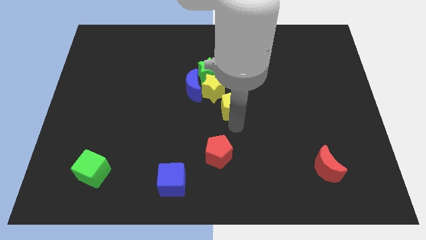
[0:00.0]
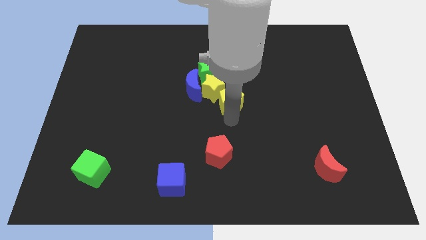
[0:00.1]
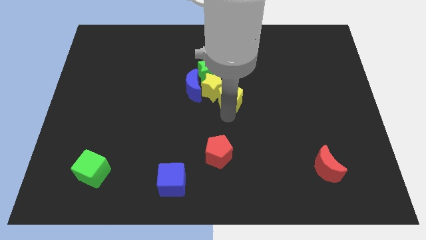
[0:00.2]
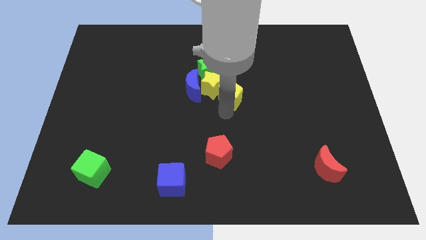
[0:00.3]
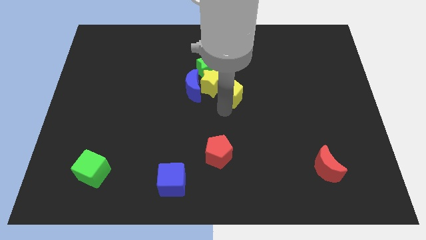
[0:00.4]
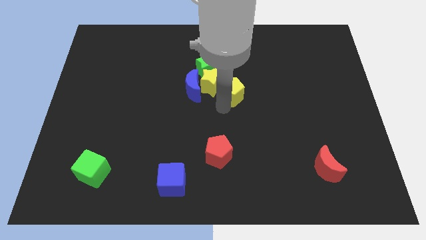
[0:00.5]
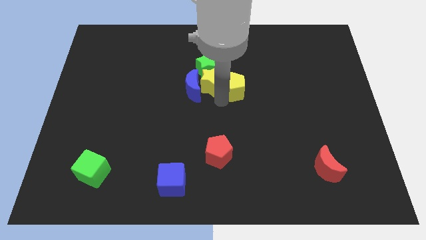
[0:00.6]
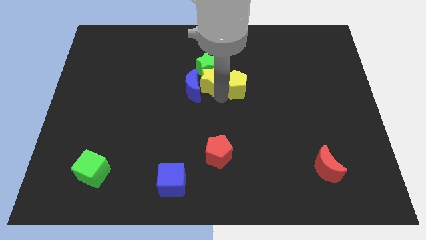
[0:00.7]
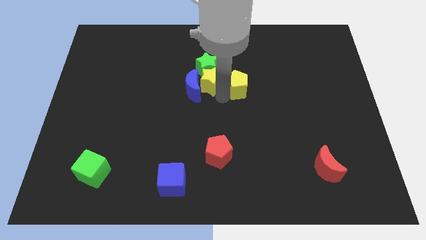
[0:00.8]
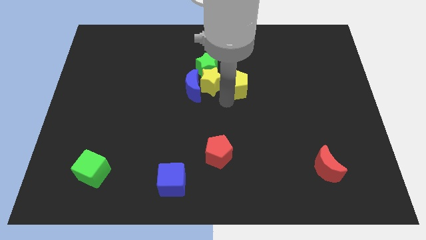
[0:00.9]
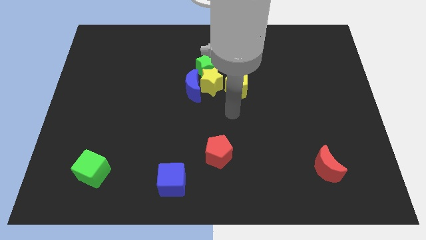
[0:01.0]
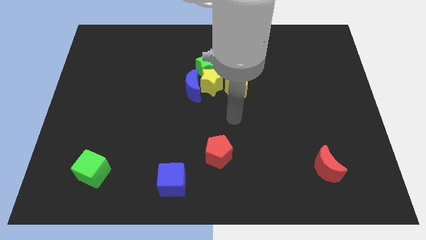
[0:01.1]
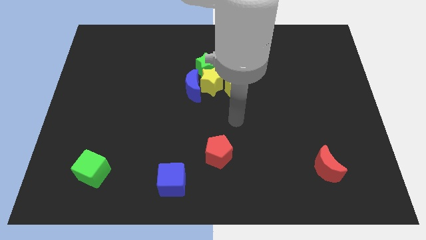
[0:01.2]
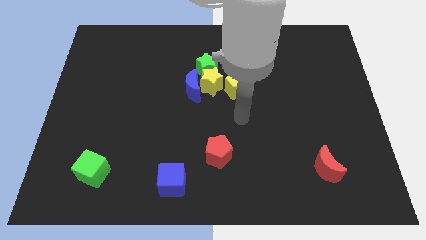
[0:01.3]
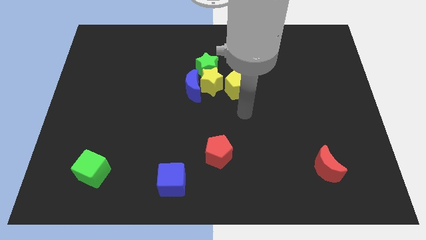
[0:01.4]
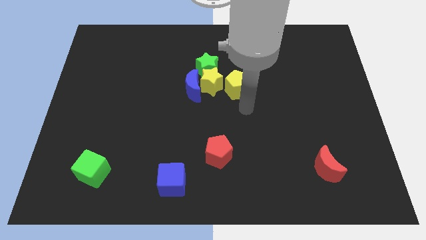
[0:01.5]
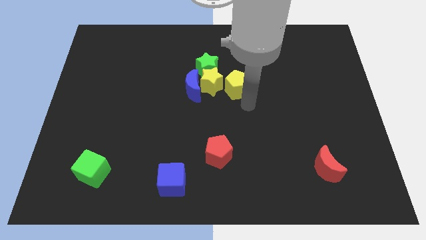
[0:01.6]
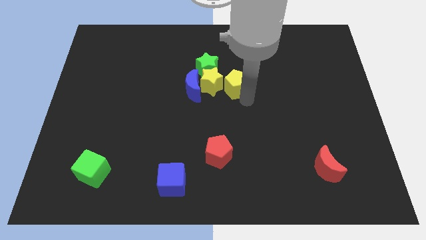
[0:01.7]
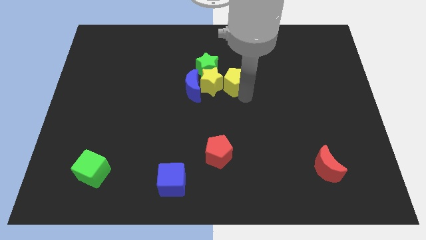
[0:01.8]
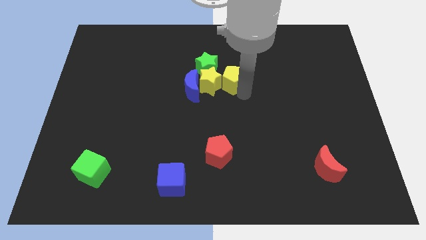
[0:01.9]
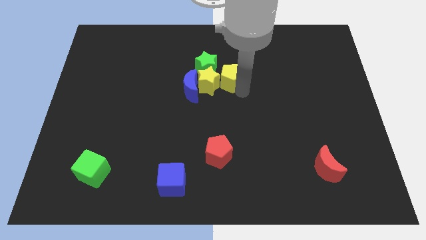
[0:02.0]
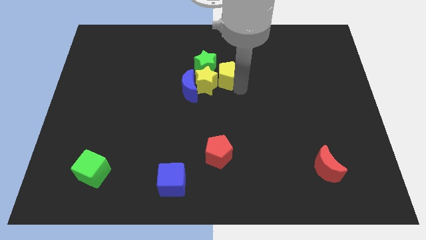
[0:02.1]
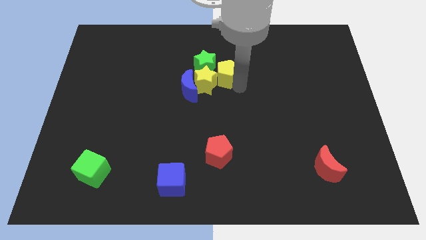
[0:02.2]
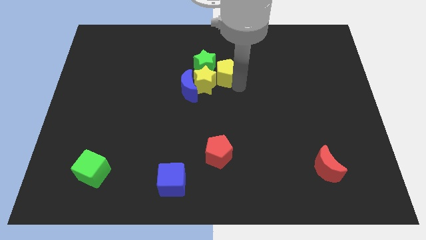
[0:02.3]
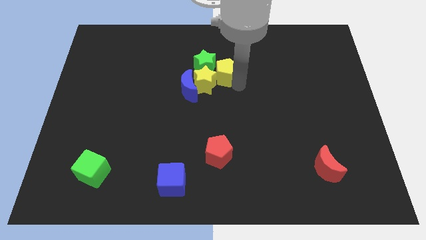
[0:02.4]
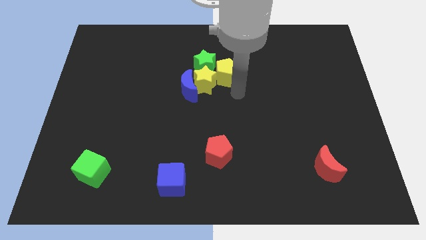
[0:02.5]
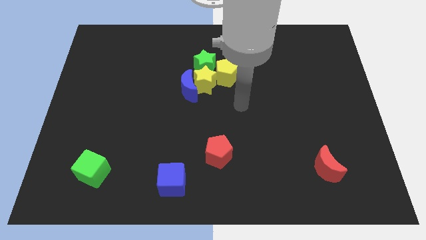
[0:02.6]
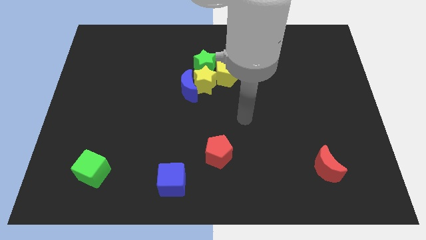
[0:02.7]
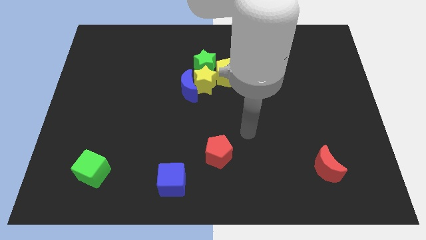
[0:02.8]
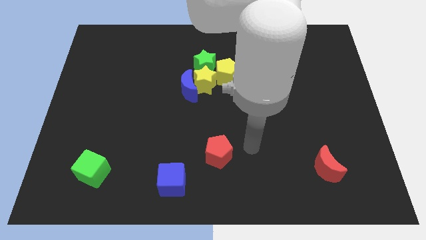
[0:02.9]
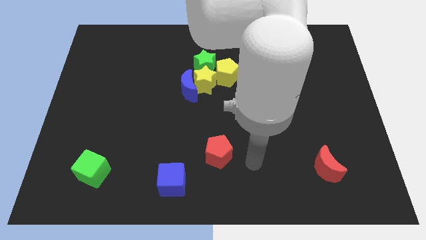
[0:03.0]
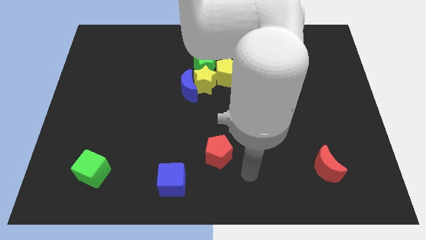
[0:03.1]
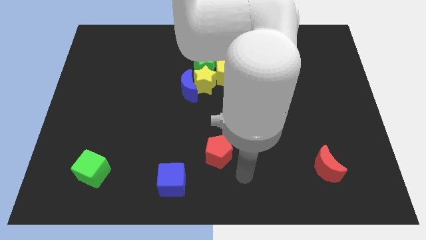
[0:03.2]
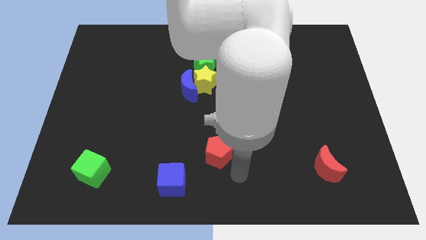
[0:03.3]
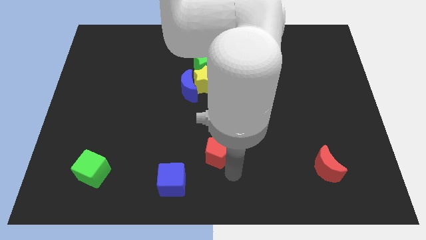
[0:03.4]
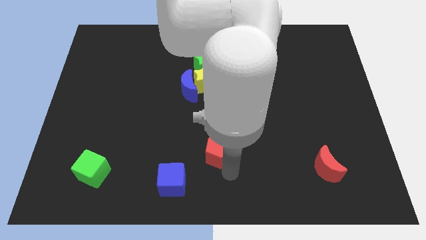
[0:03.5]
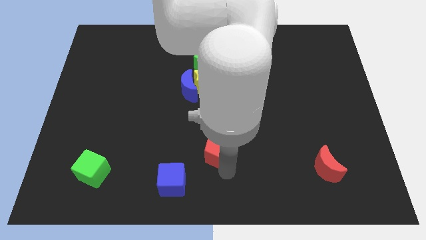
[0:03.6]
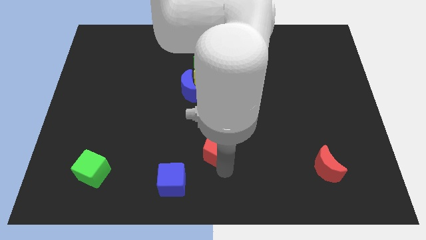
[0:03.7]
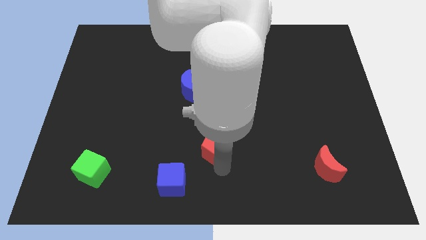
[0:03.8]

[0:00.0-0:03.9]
move your arm towards the red pentagon

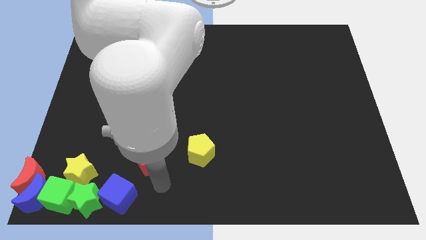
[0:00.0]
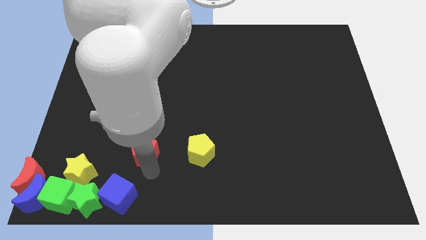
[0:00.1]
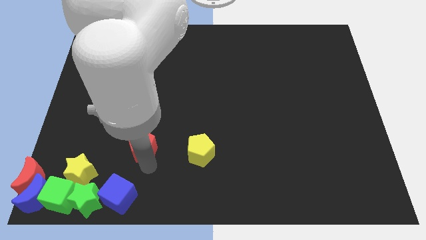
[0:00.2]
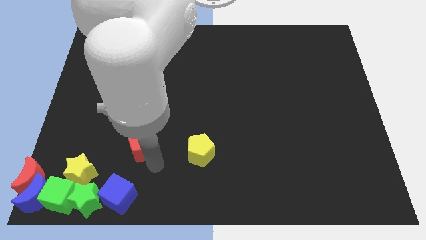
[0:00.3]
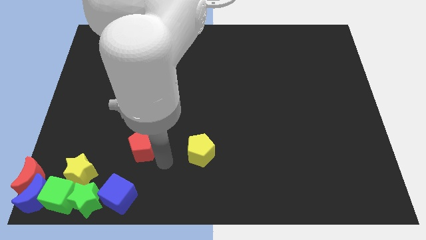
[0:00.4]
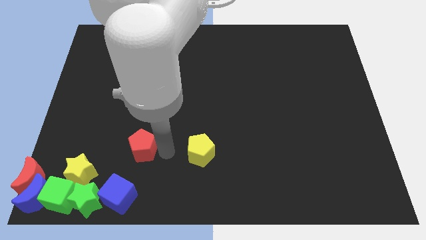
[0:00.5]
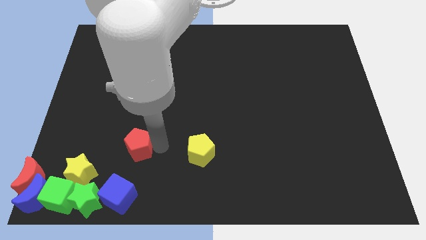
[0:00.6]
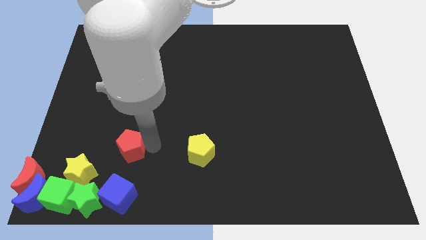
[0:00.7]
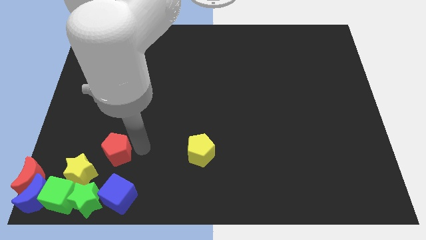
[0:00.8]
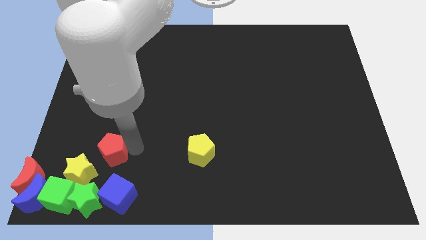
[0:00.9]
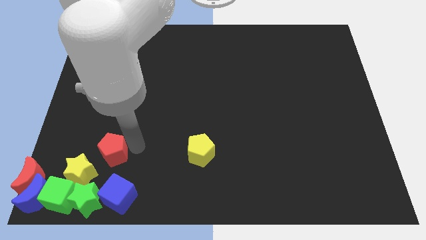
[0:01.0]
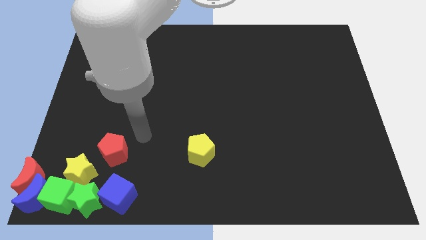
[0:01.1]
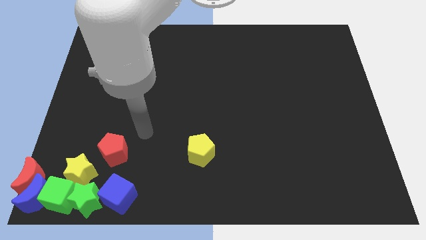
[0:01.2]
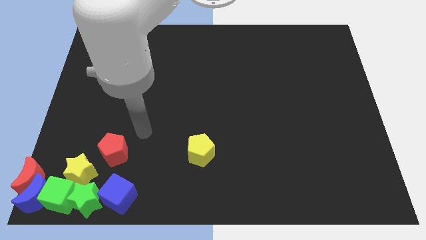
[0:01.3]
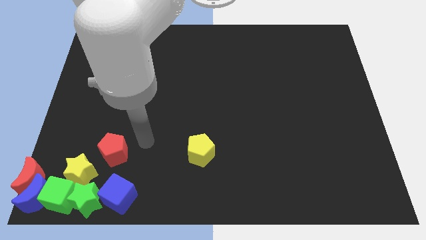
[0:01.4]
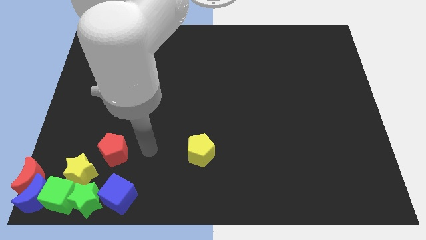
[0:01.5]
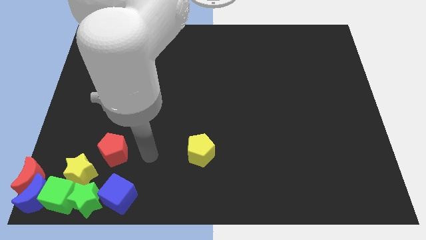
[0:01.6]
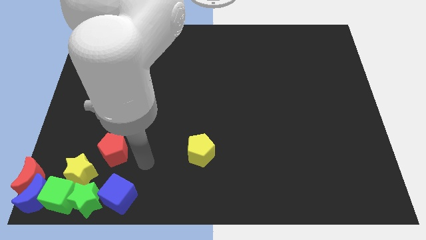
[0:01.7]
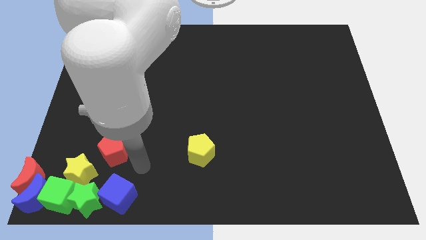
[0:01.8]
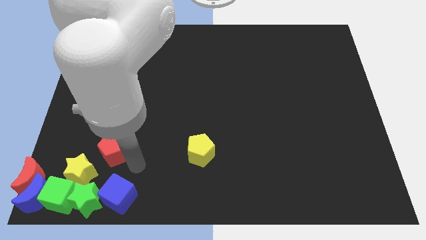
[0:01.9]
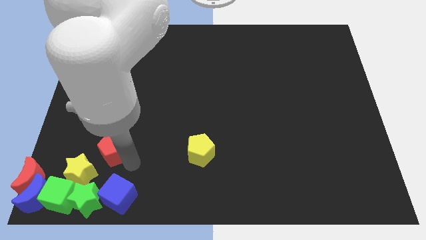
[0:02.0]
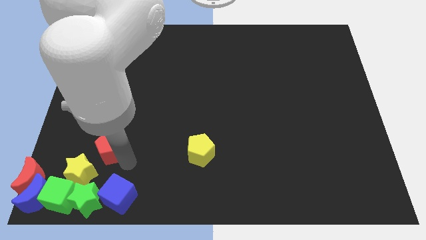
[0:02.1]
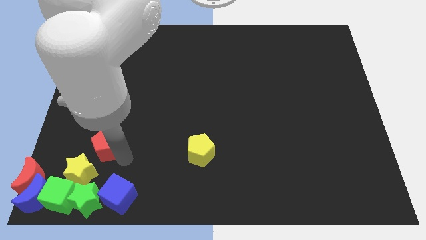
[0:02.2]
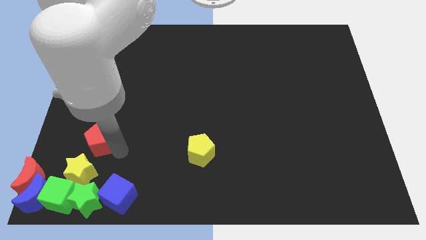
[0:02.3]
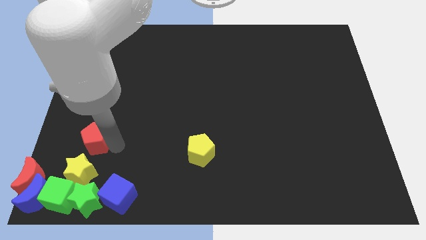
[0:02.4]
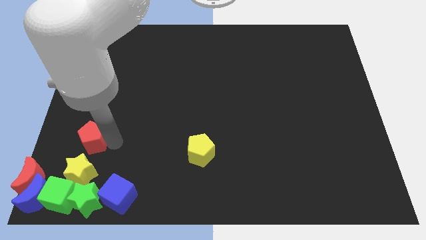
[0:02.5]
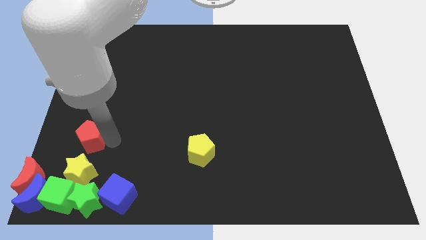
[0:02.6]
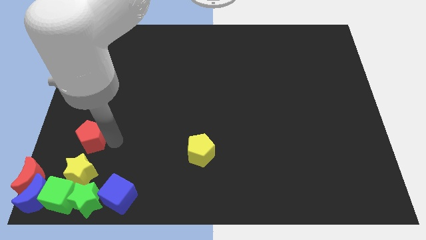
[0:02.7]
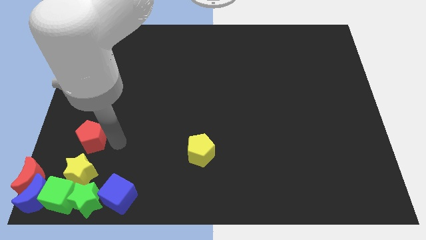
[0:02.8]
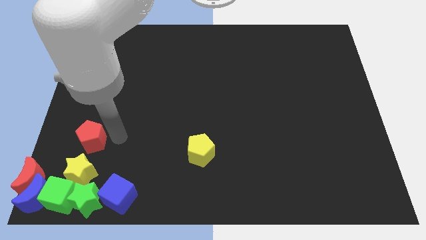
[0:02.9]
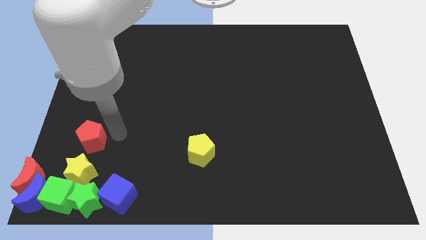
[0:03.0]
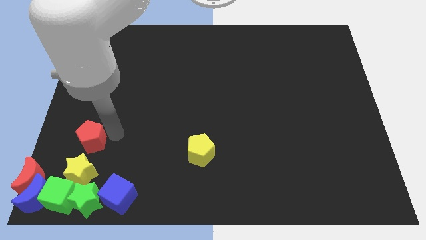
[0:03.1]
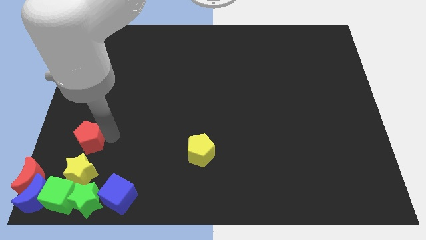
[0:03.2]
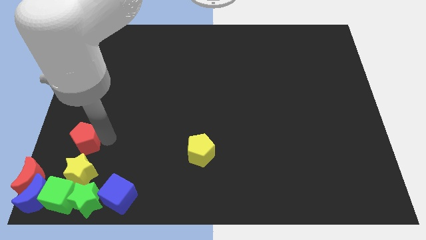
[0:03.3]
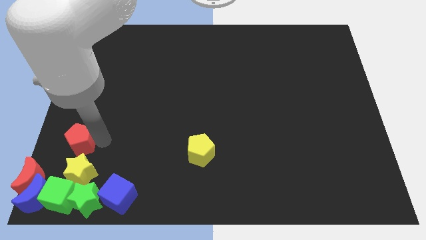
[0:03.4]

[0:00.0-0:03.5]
move the red pentagon above the yellow star

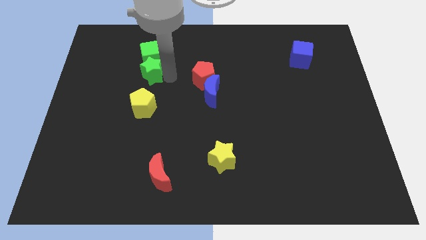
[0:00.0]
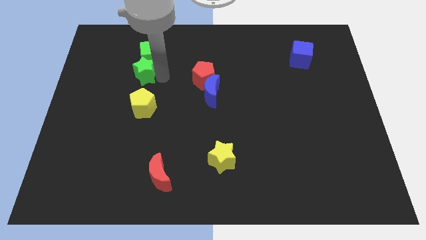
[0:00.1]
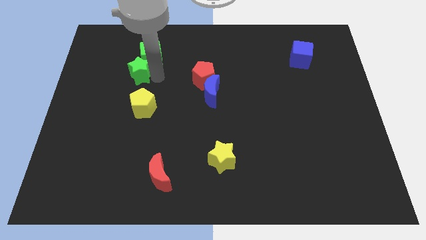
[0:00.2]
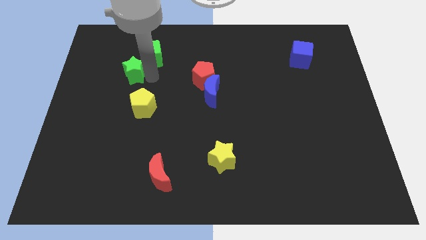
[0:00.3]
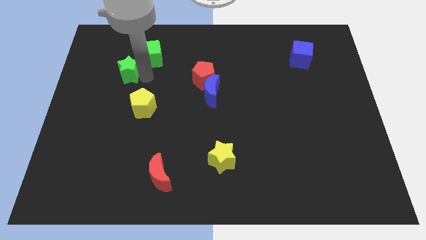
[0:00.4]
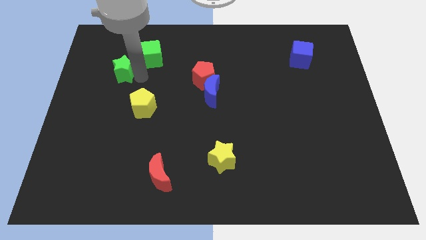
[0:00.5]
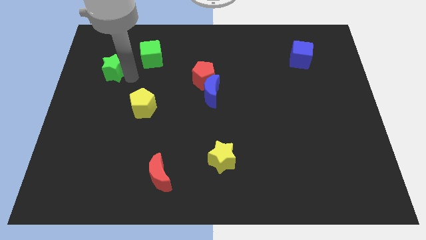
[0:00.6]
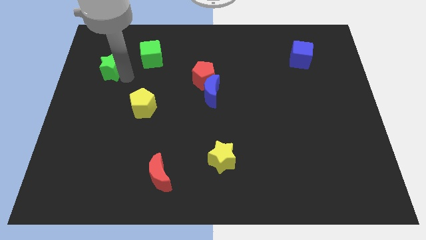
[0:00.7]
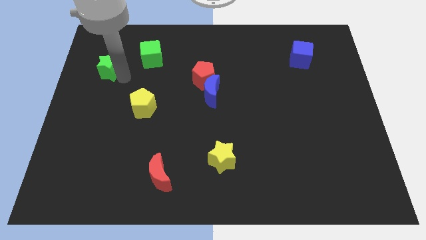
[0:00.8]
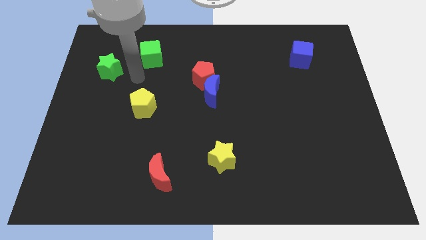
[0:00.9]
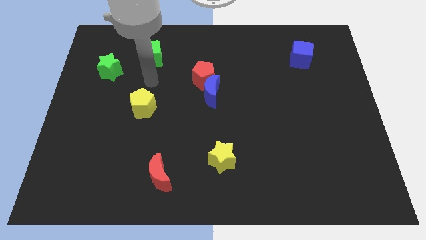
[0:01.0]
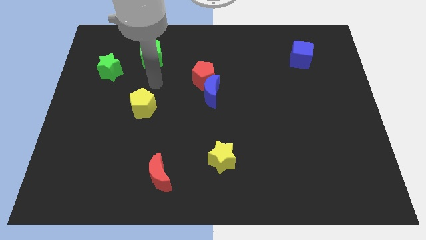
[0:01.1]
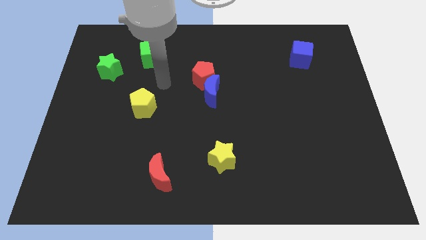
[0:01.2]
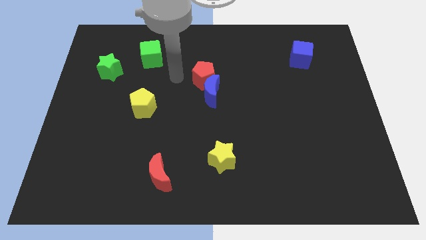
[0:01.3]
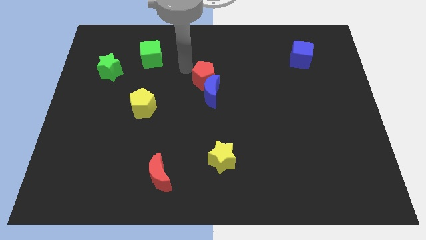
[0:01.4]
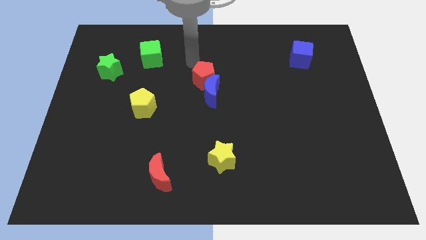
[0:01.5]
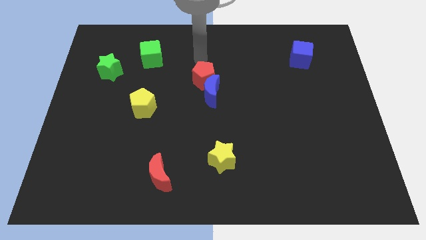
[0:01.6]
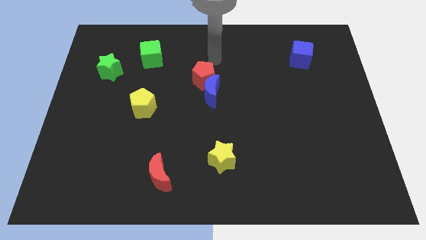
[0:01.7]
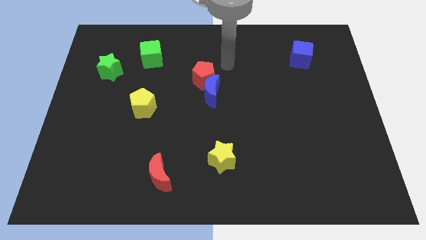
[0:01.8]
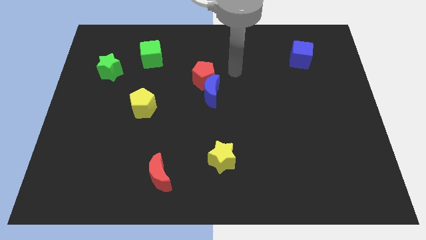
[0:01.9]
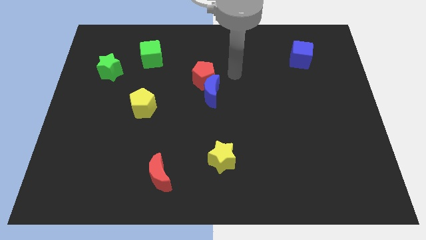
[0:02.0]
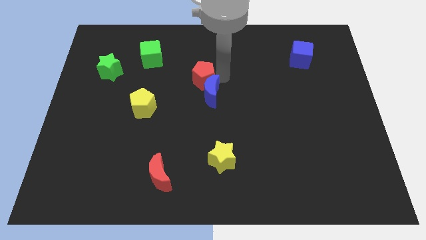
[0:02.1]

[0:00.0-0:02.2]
move green star towards center left
